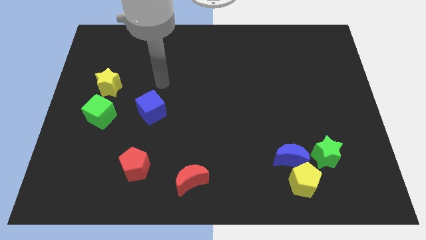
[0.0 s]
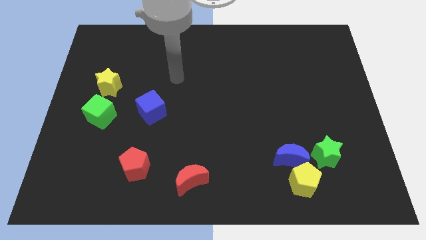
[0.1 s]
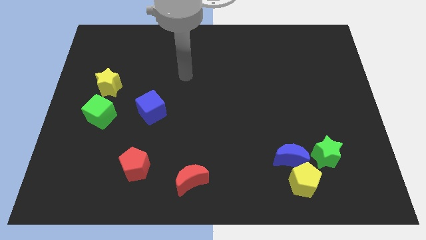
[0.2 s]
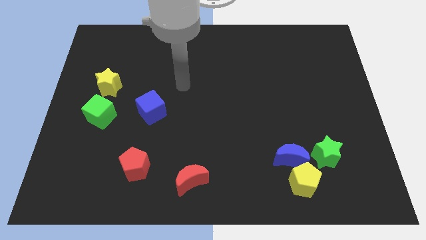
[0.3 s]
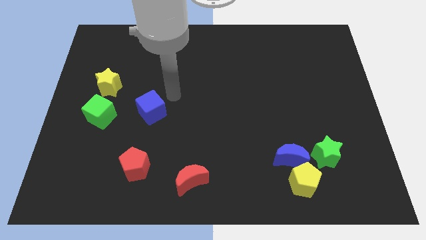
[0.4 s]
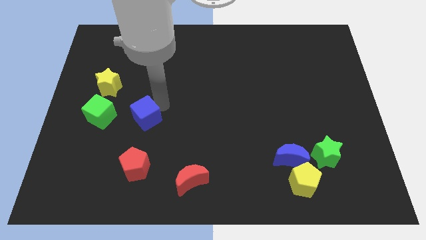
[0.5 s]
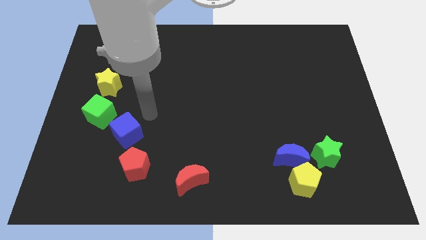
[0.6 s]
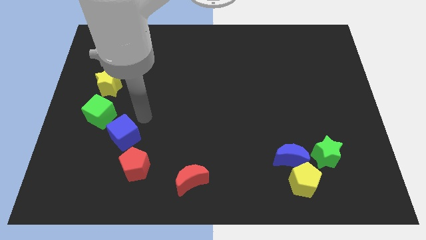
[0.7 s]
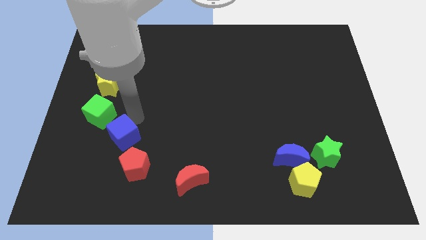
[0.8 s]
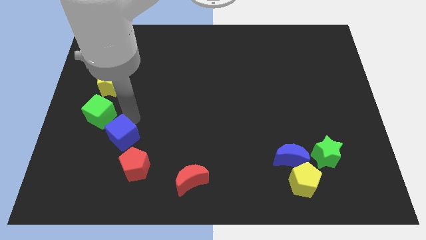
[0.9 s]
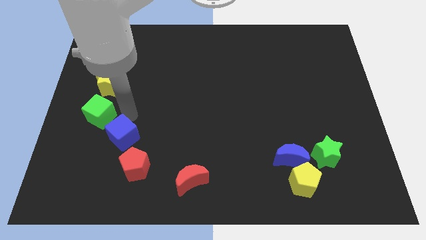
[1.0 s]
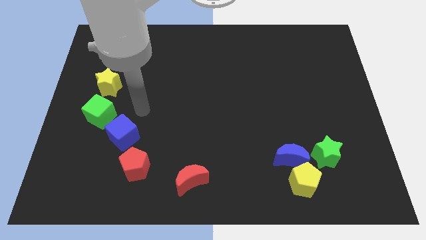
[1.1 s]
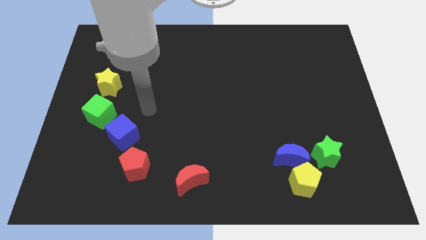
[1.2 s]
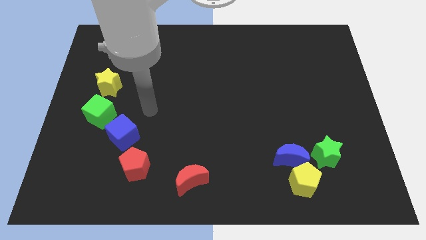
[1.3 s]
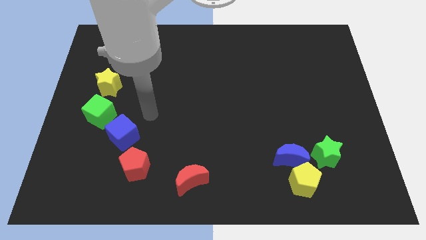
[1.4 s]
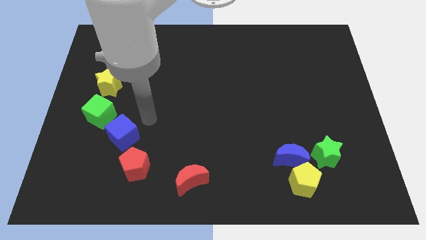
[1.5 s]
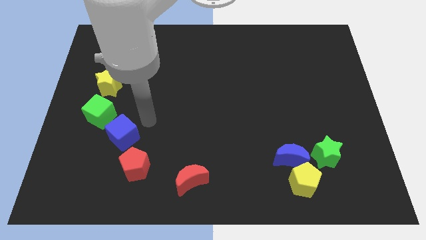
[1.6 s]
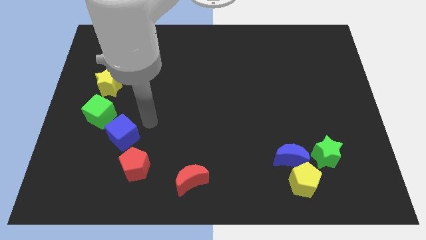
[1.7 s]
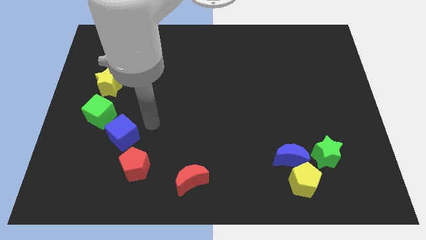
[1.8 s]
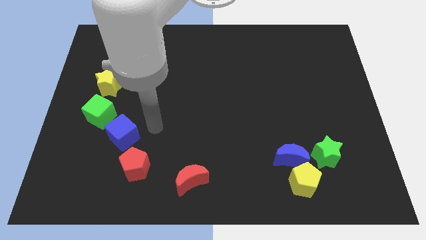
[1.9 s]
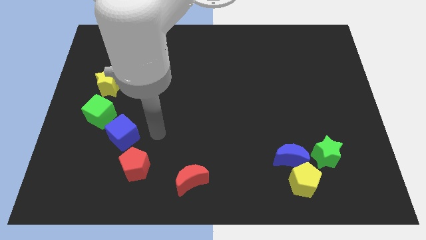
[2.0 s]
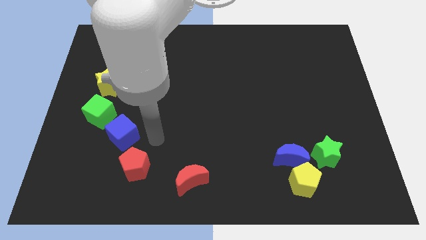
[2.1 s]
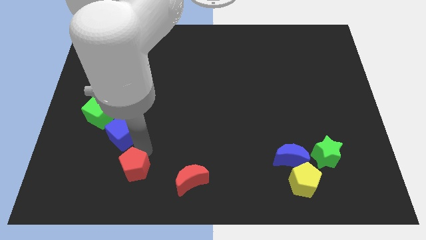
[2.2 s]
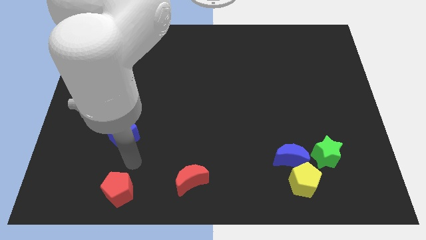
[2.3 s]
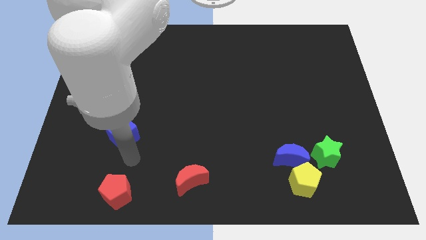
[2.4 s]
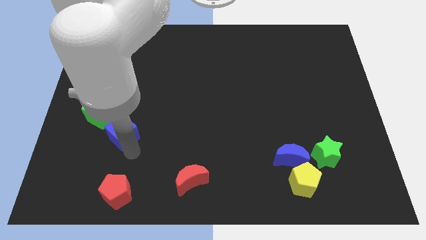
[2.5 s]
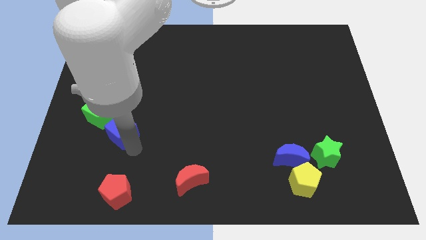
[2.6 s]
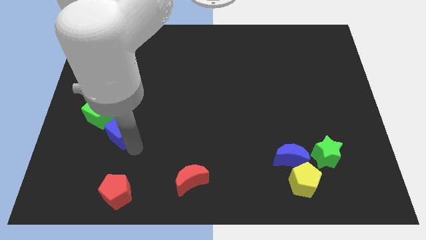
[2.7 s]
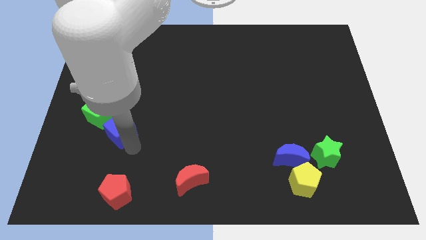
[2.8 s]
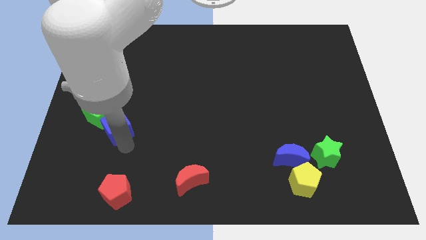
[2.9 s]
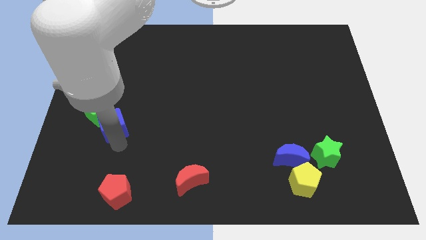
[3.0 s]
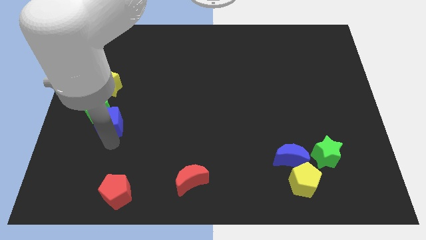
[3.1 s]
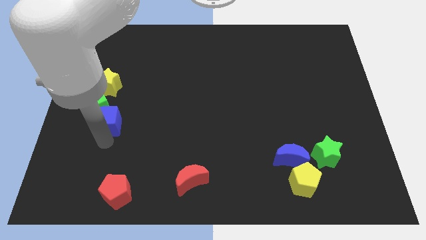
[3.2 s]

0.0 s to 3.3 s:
move blue cube close to green cube

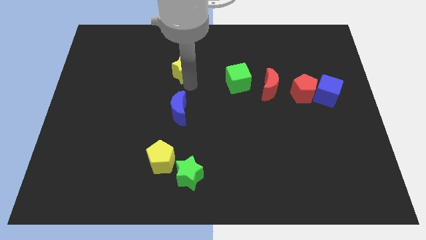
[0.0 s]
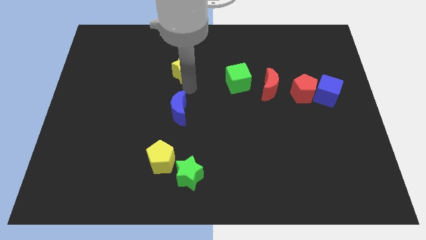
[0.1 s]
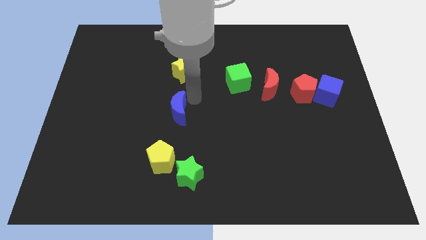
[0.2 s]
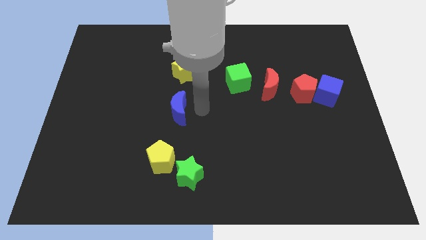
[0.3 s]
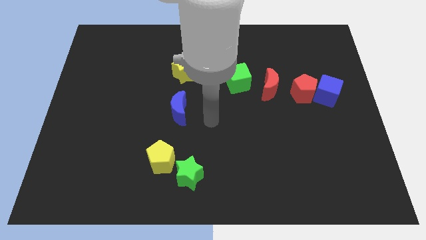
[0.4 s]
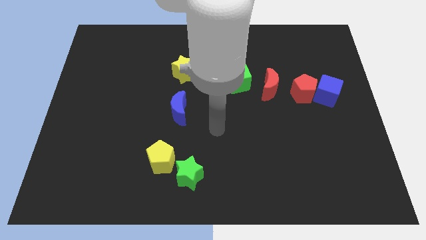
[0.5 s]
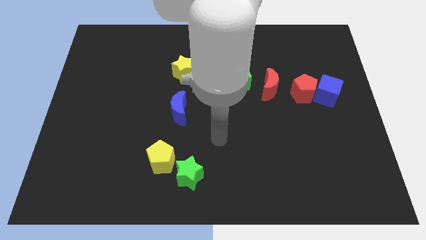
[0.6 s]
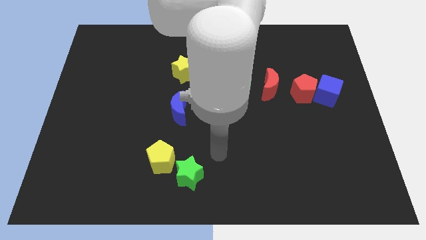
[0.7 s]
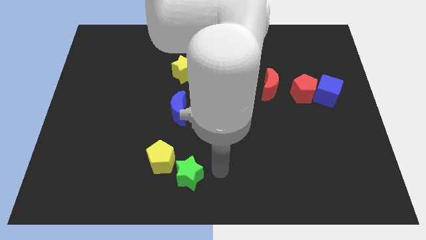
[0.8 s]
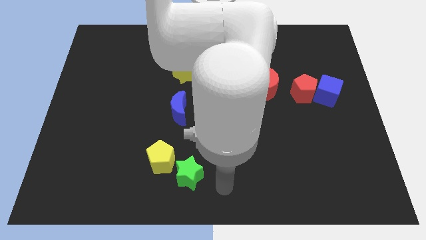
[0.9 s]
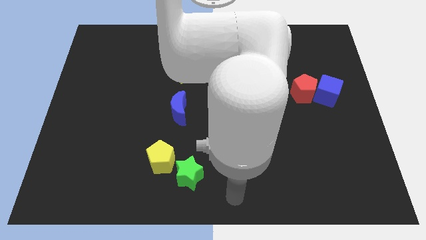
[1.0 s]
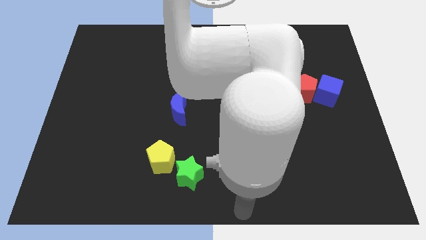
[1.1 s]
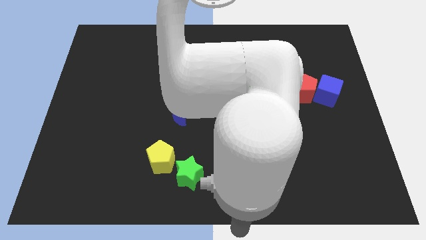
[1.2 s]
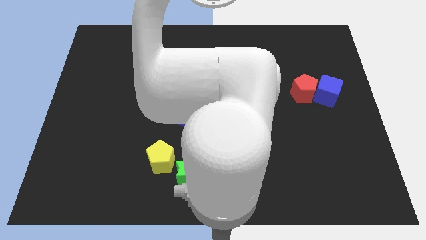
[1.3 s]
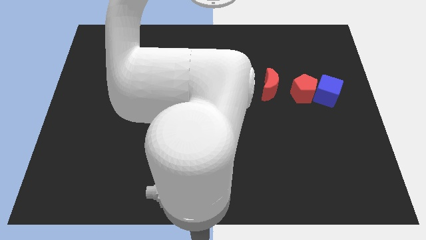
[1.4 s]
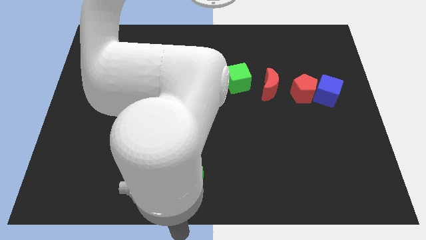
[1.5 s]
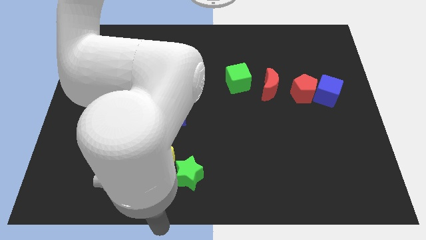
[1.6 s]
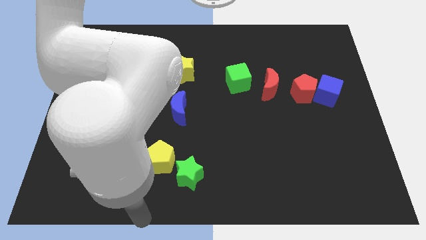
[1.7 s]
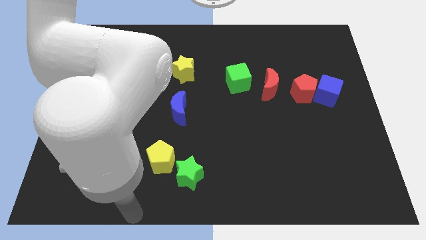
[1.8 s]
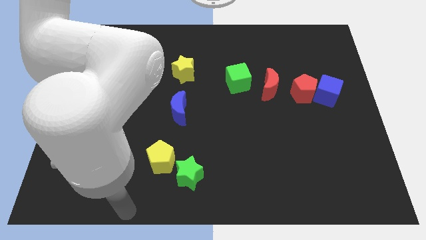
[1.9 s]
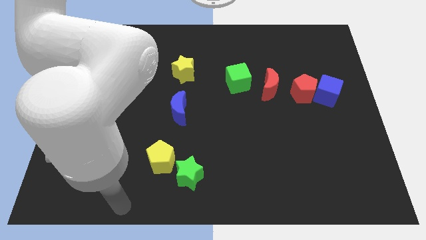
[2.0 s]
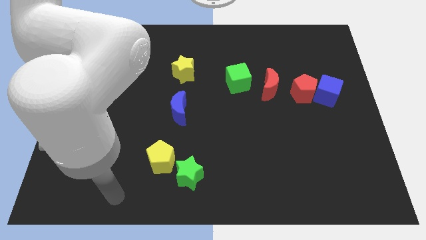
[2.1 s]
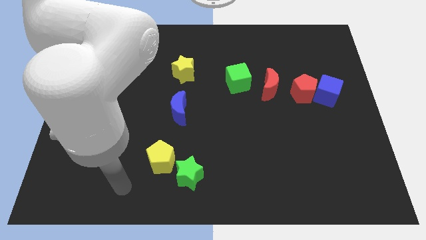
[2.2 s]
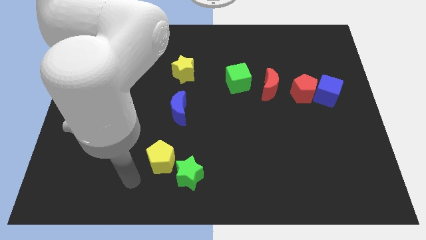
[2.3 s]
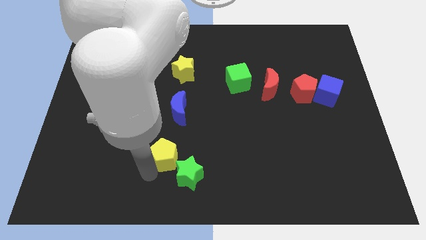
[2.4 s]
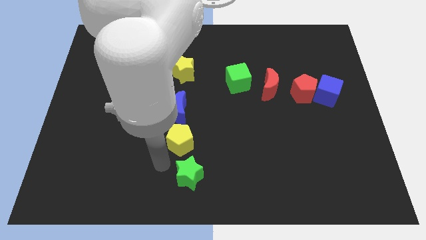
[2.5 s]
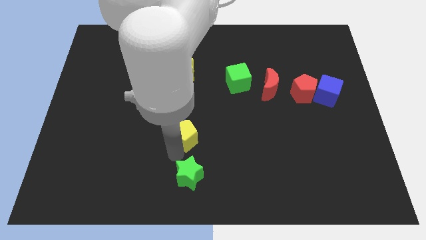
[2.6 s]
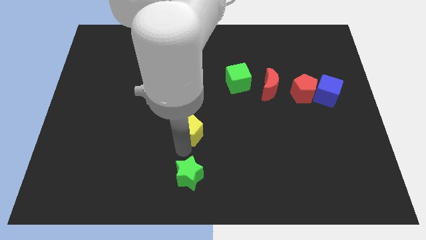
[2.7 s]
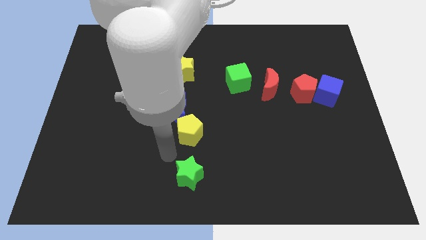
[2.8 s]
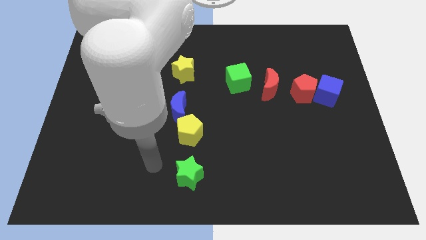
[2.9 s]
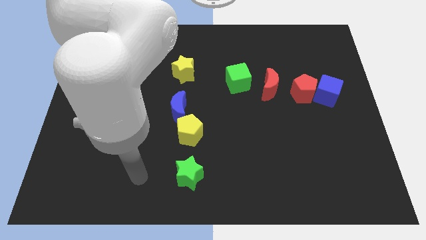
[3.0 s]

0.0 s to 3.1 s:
move the yellow pentagon at the bottom side of the blue crecsent

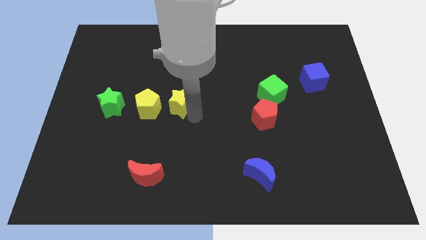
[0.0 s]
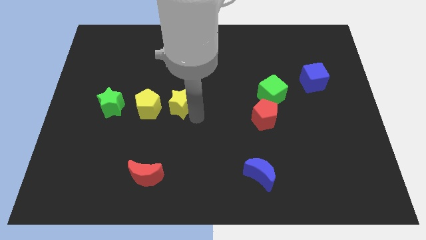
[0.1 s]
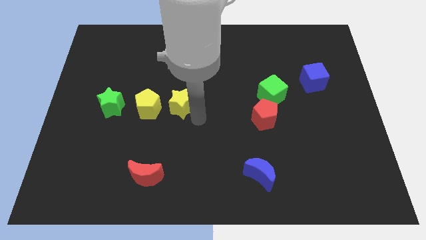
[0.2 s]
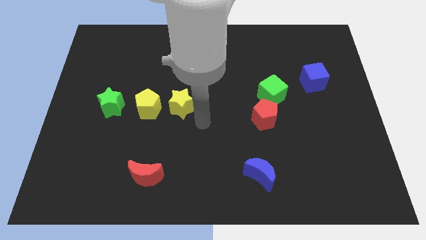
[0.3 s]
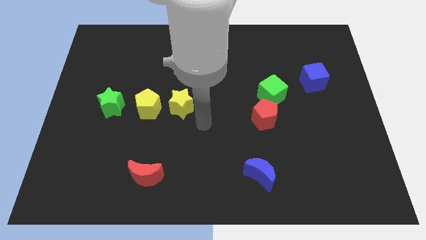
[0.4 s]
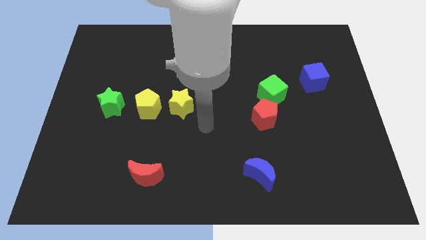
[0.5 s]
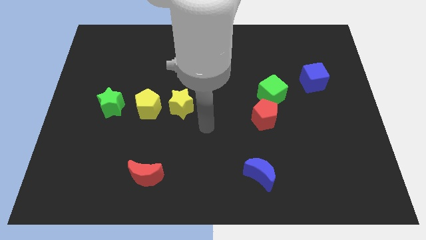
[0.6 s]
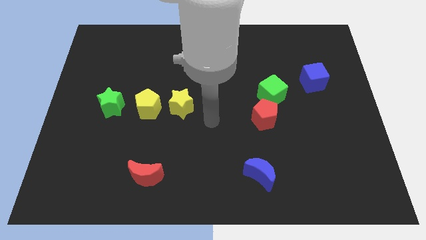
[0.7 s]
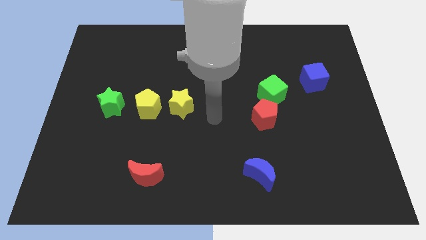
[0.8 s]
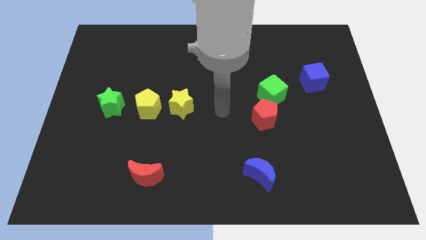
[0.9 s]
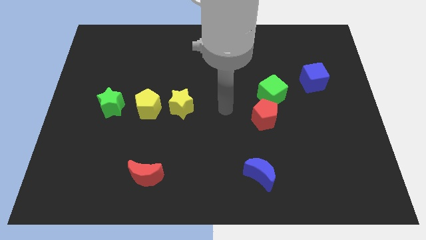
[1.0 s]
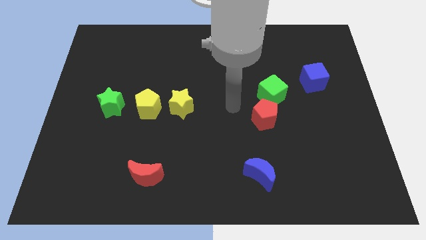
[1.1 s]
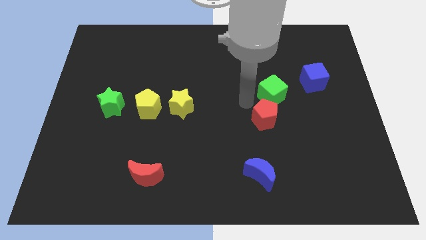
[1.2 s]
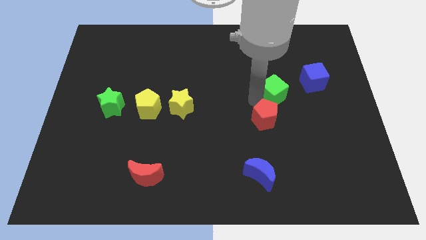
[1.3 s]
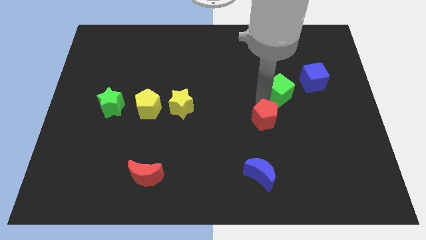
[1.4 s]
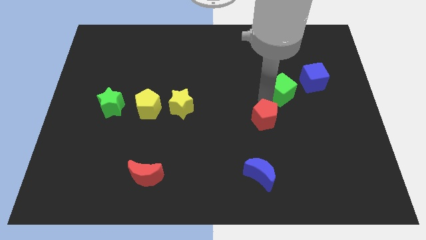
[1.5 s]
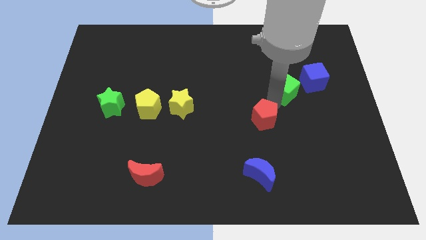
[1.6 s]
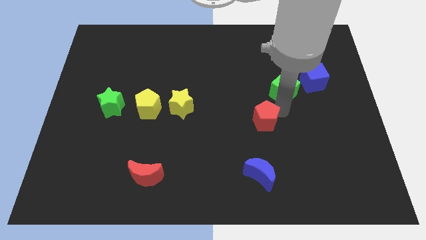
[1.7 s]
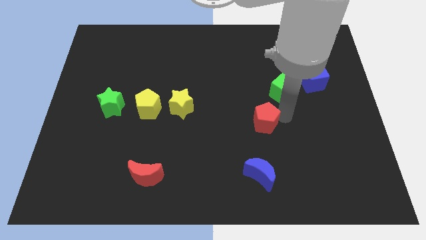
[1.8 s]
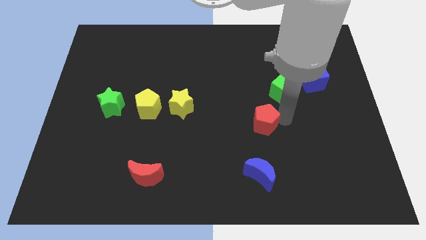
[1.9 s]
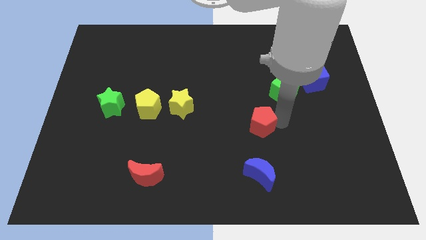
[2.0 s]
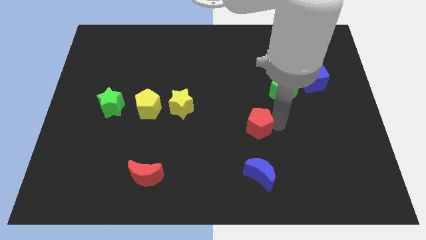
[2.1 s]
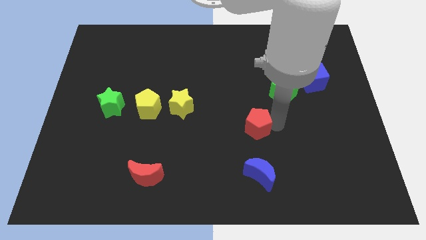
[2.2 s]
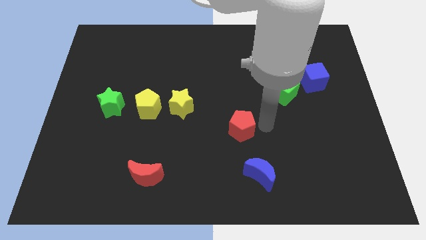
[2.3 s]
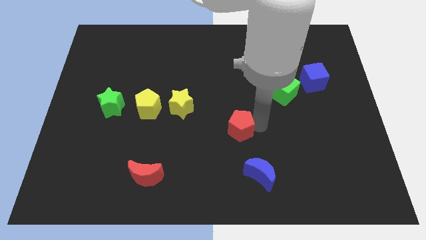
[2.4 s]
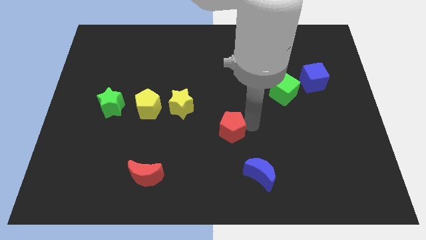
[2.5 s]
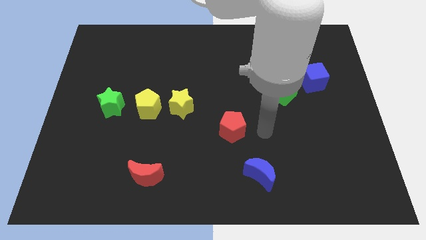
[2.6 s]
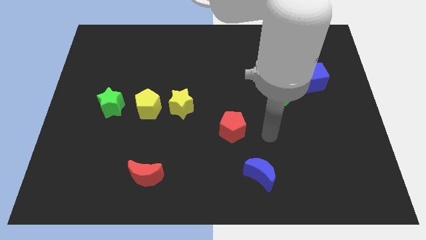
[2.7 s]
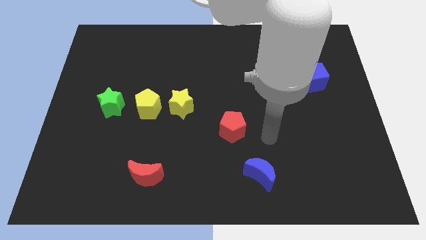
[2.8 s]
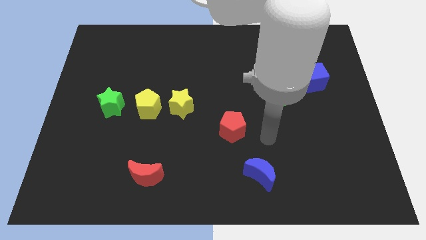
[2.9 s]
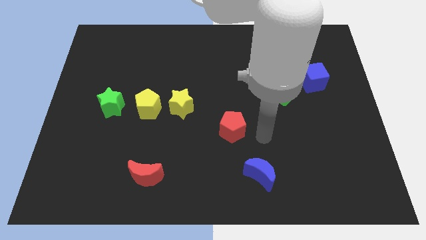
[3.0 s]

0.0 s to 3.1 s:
separate the red pentagon and the green cube
